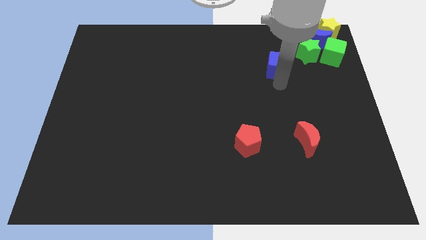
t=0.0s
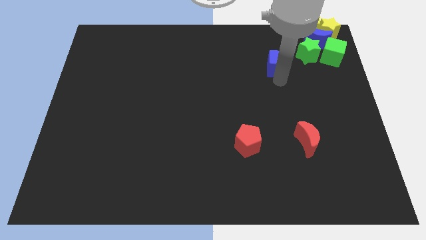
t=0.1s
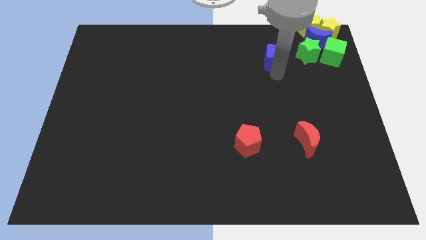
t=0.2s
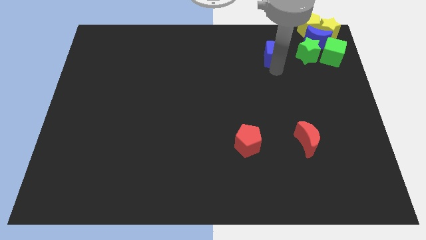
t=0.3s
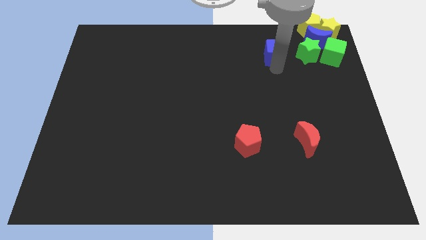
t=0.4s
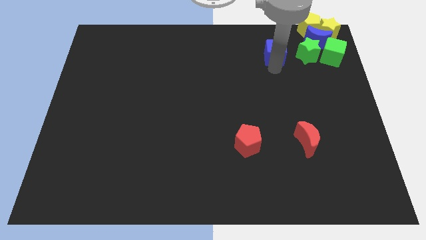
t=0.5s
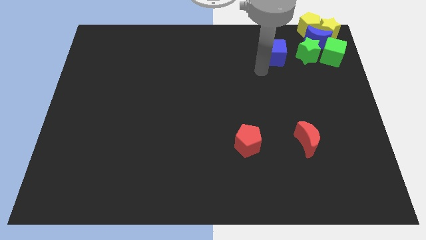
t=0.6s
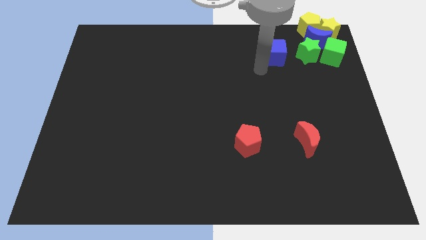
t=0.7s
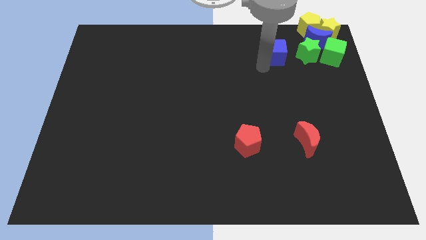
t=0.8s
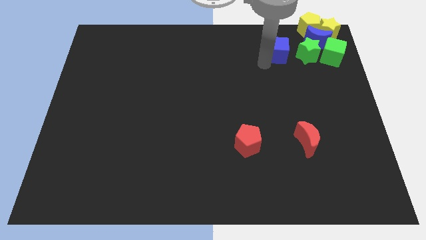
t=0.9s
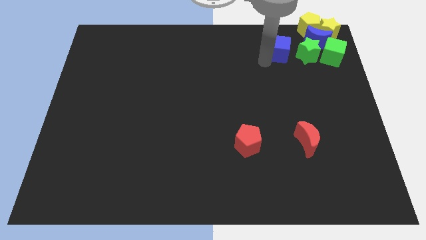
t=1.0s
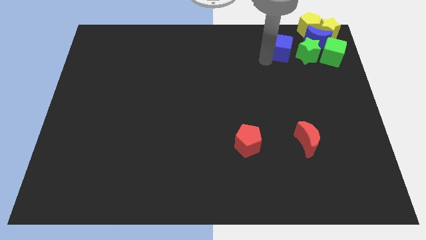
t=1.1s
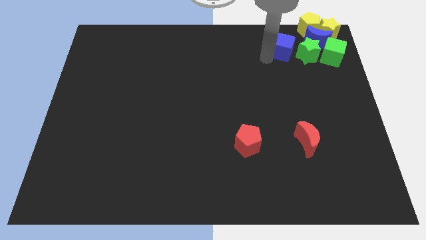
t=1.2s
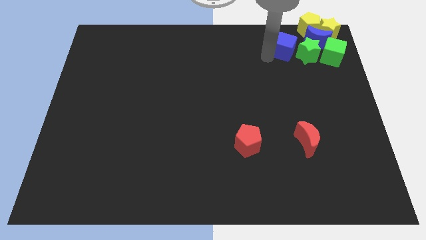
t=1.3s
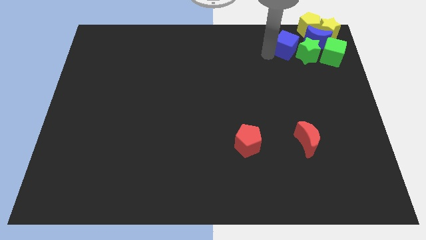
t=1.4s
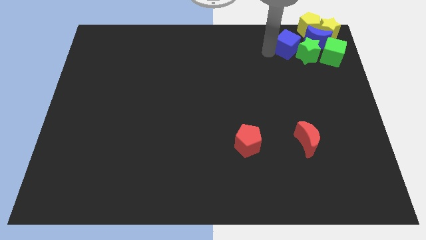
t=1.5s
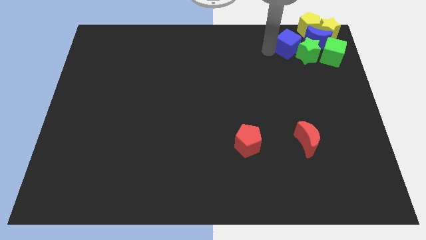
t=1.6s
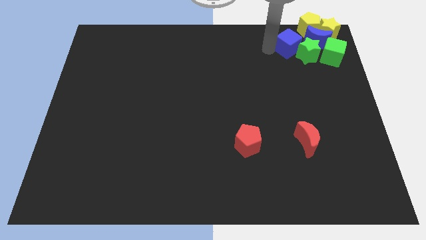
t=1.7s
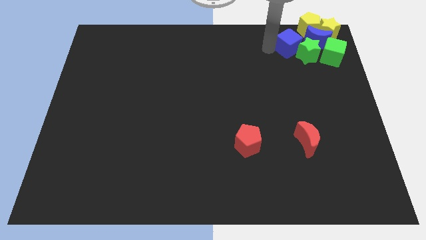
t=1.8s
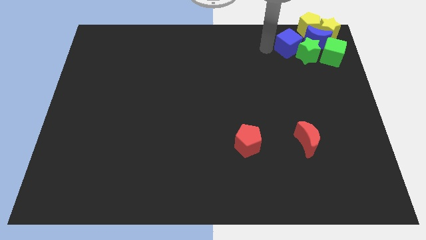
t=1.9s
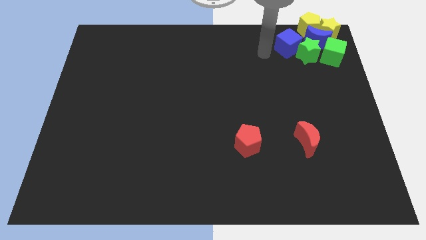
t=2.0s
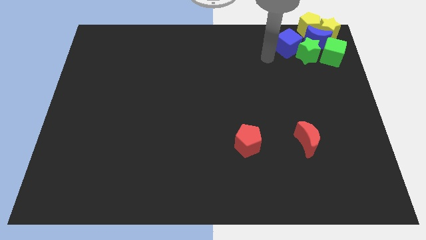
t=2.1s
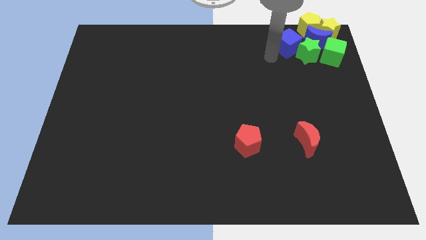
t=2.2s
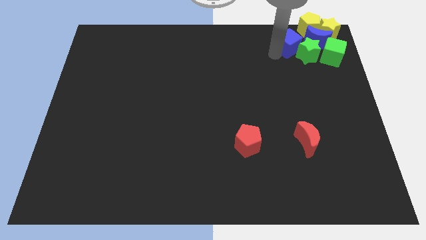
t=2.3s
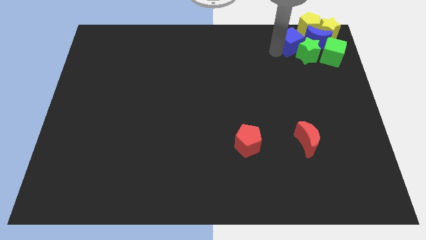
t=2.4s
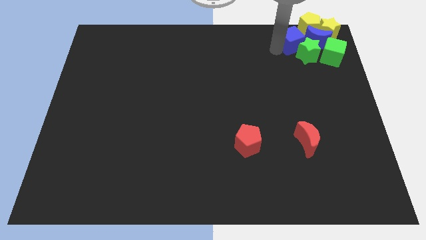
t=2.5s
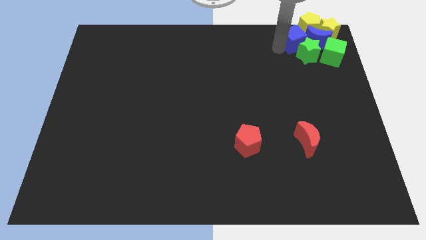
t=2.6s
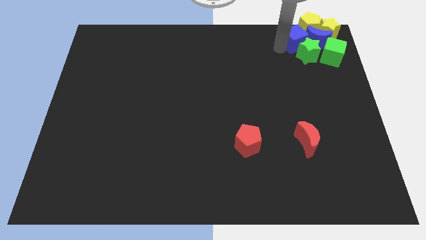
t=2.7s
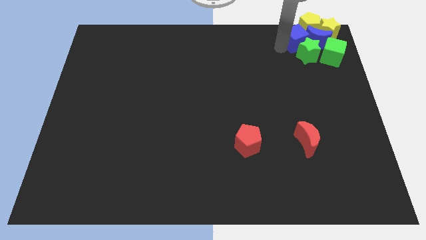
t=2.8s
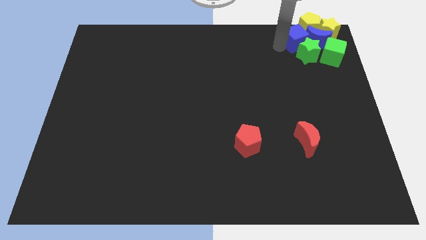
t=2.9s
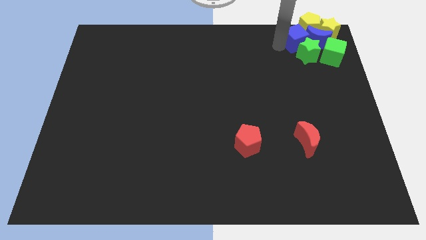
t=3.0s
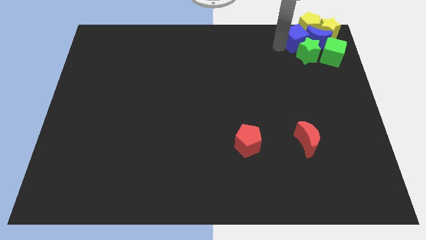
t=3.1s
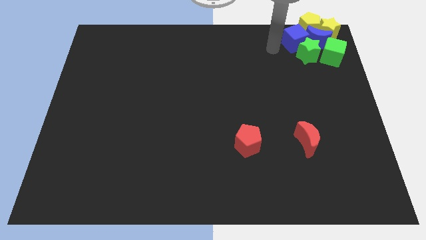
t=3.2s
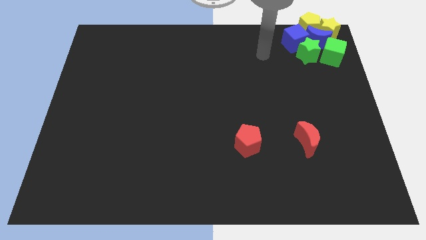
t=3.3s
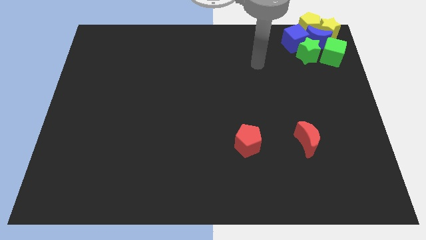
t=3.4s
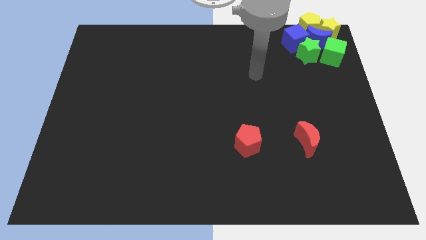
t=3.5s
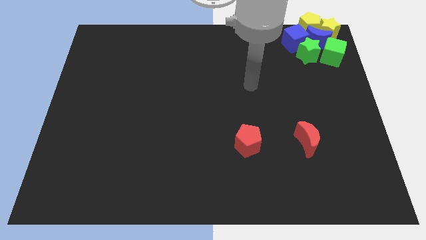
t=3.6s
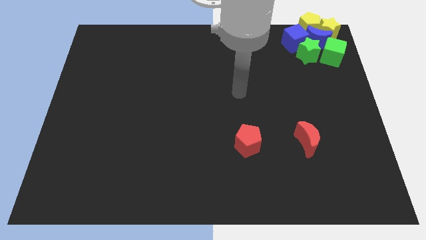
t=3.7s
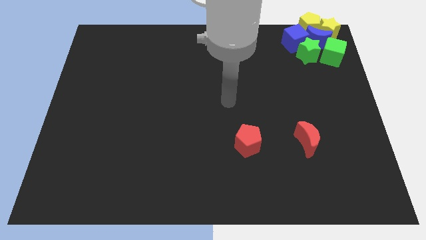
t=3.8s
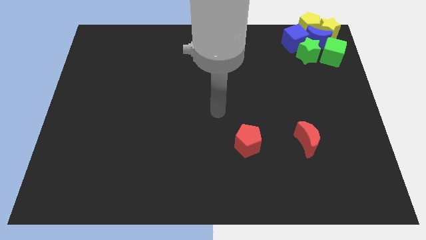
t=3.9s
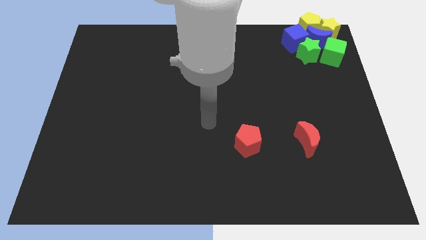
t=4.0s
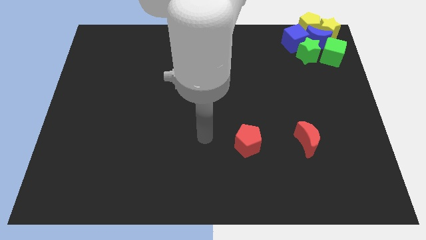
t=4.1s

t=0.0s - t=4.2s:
push blue cube into the group of blocks

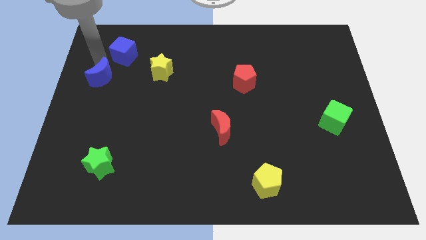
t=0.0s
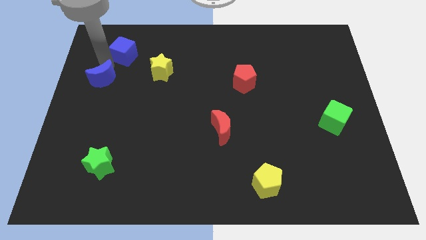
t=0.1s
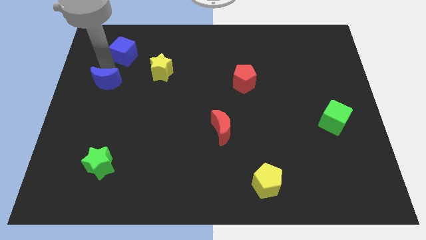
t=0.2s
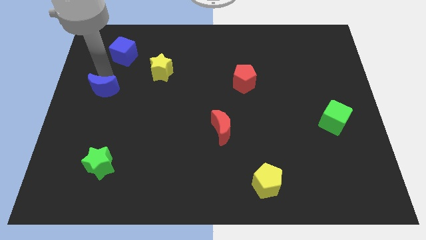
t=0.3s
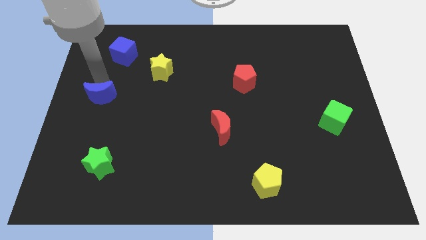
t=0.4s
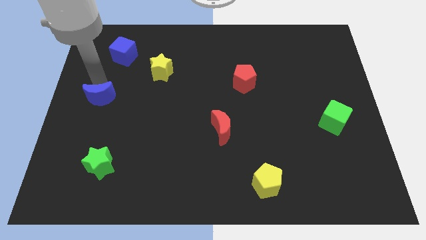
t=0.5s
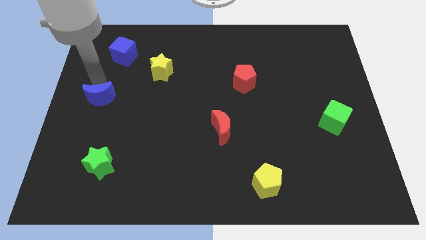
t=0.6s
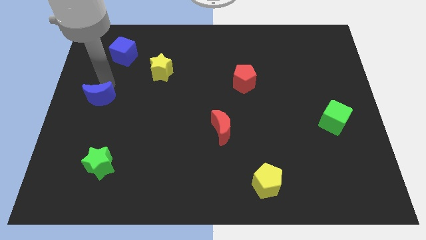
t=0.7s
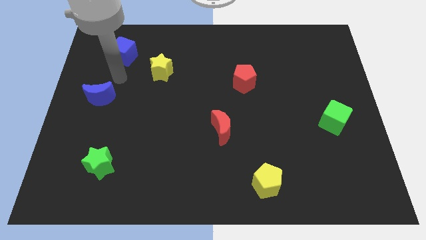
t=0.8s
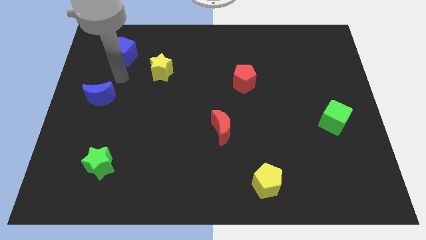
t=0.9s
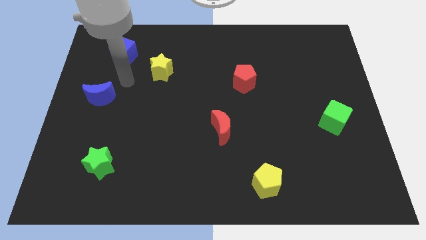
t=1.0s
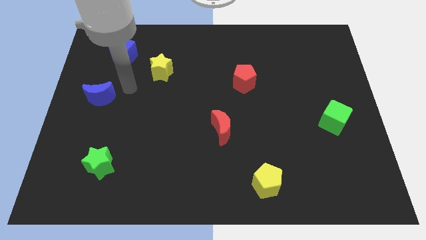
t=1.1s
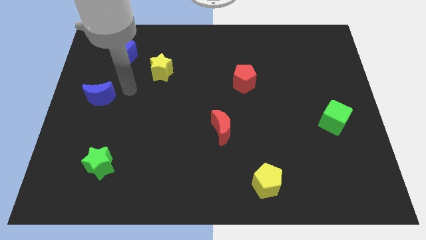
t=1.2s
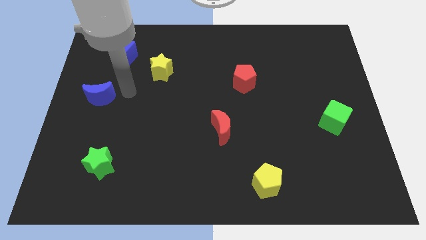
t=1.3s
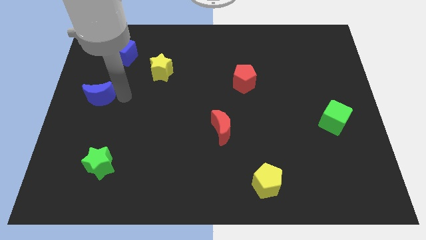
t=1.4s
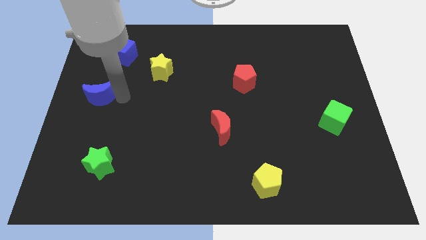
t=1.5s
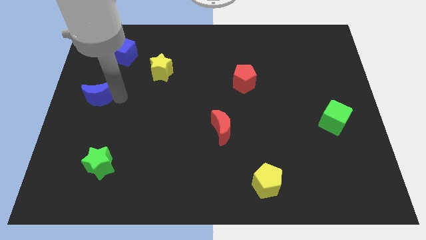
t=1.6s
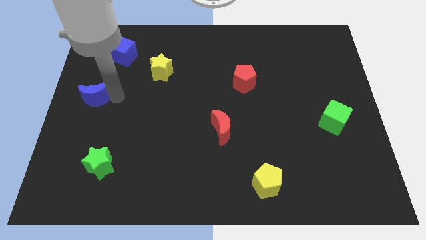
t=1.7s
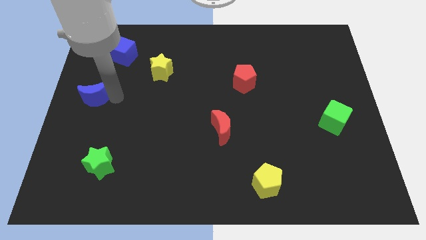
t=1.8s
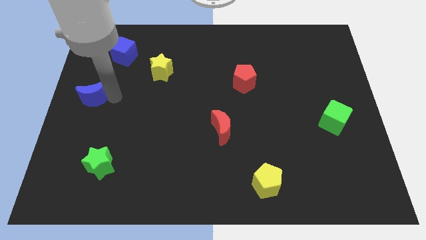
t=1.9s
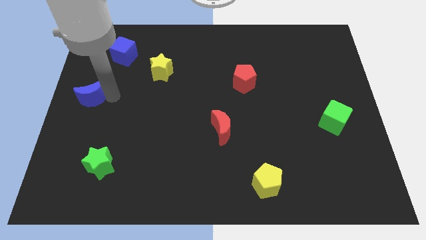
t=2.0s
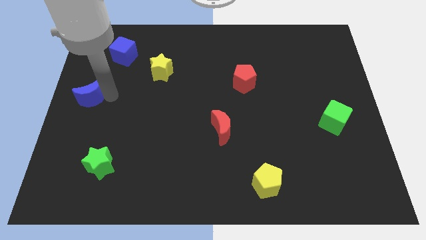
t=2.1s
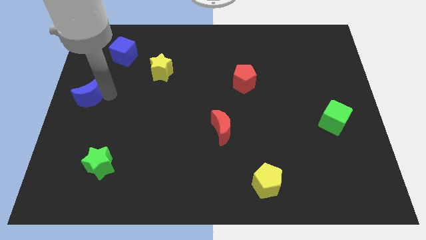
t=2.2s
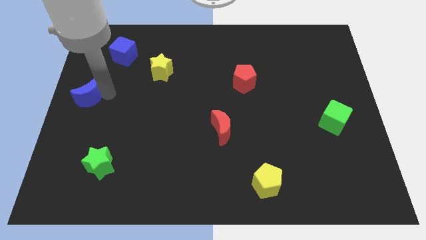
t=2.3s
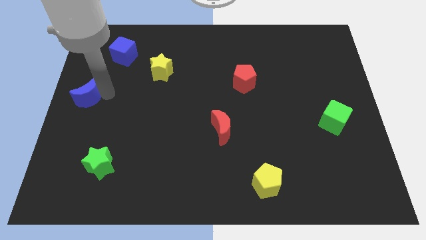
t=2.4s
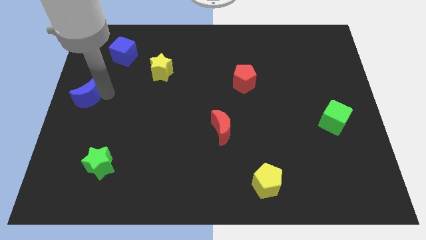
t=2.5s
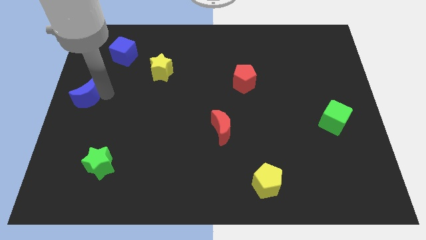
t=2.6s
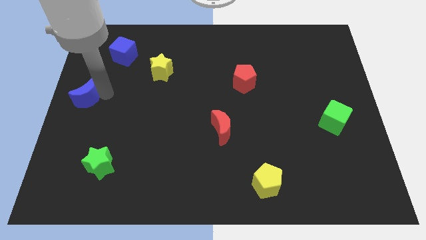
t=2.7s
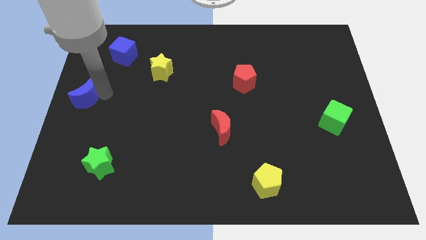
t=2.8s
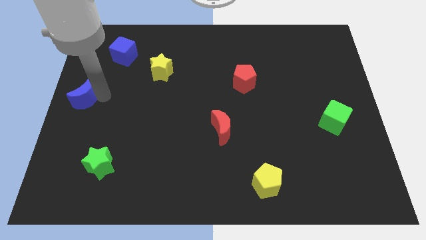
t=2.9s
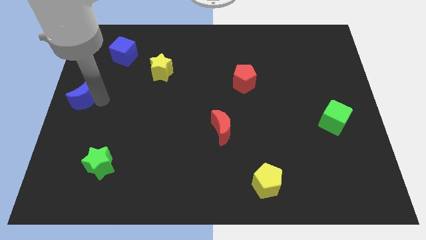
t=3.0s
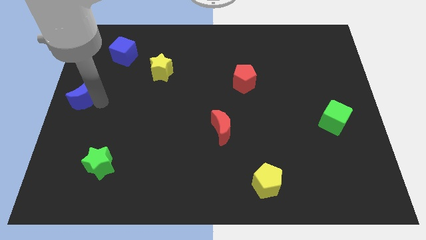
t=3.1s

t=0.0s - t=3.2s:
move the blue crescent towards the left center of the board

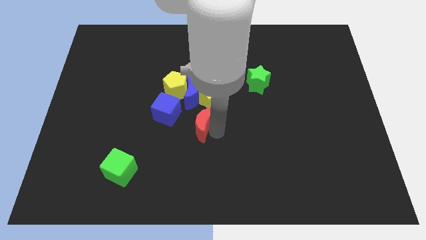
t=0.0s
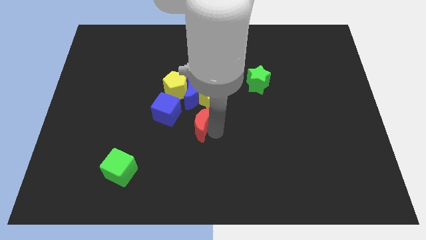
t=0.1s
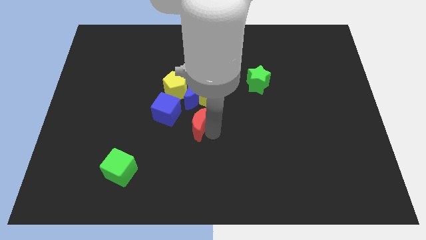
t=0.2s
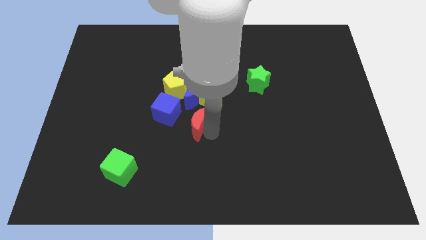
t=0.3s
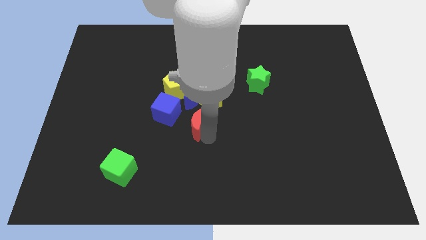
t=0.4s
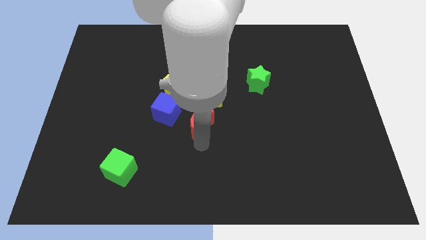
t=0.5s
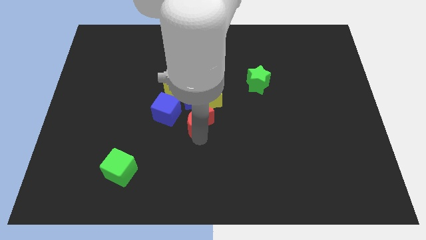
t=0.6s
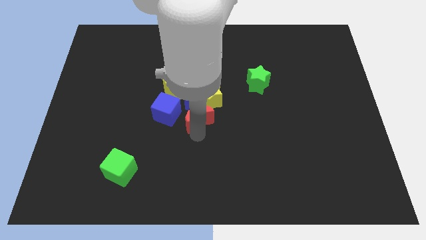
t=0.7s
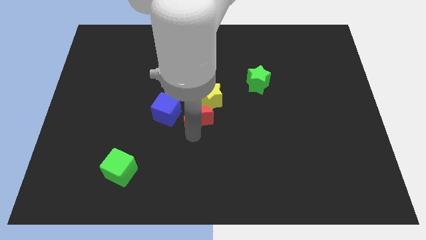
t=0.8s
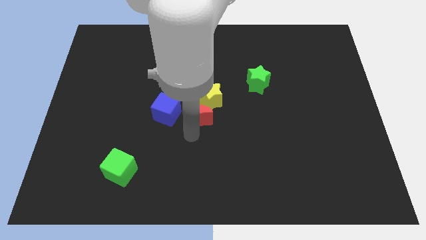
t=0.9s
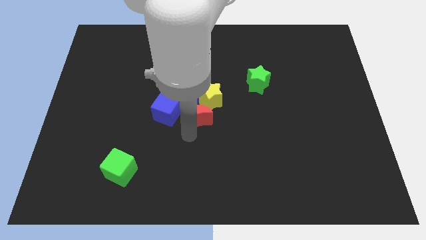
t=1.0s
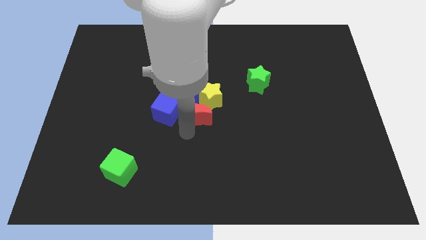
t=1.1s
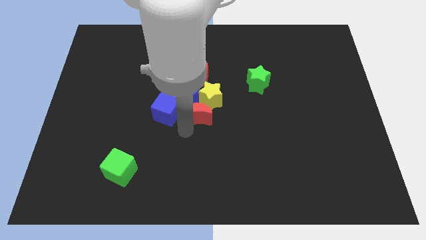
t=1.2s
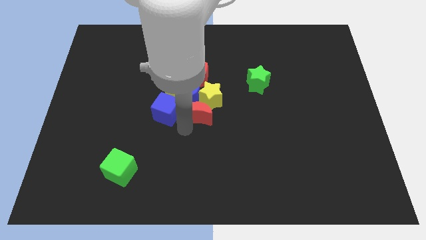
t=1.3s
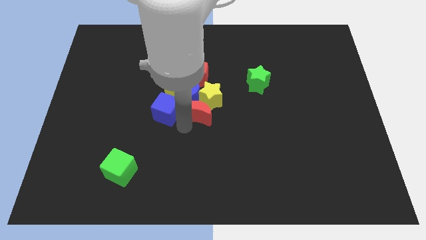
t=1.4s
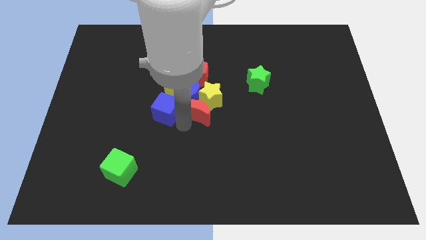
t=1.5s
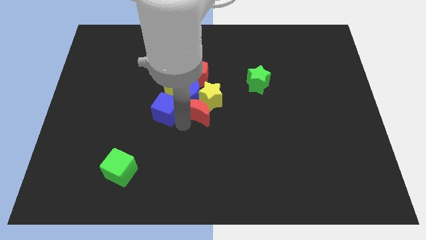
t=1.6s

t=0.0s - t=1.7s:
add the red moon to the group of blocks at the center of the board
